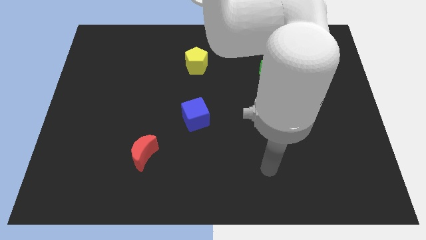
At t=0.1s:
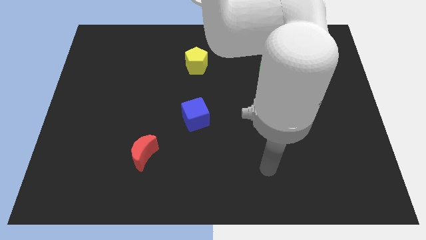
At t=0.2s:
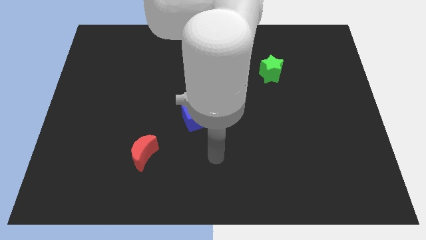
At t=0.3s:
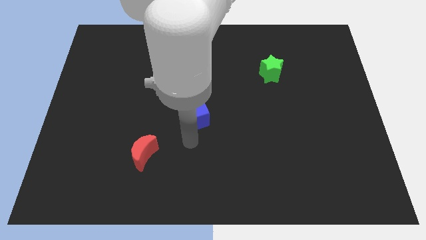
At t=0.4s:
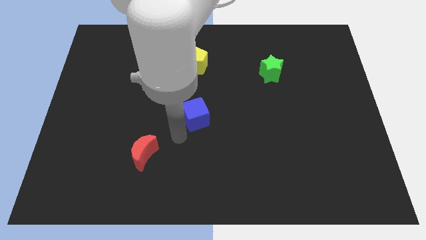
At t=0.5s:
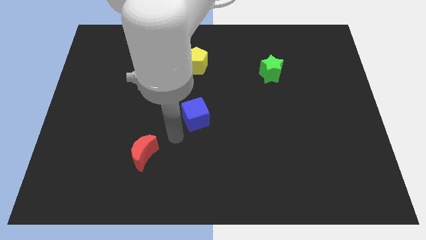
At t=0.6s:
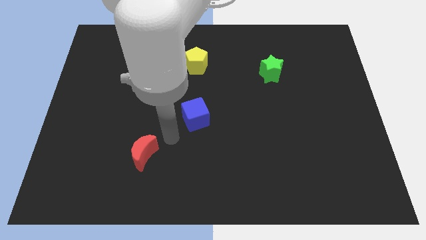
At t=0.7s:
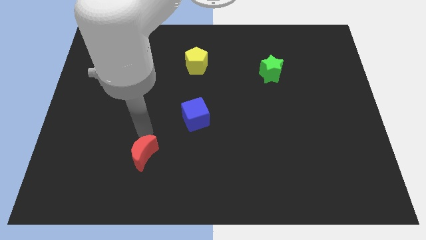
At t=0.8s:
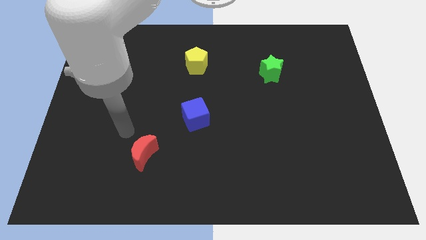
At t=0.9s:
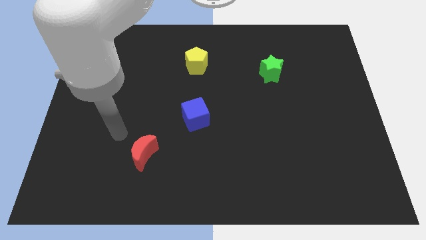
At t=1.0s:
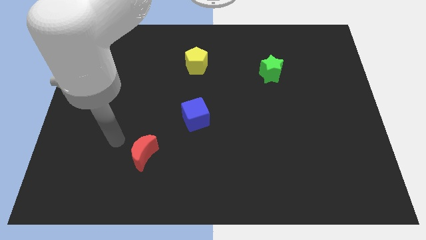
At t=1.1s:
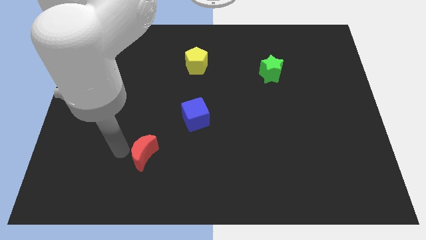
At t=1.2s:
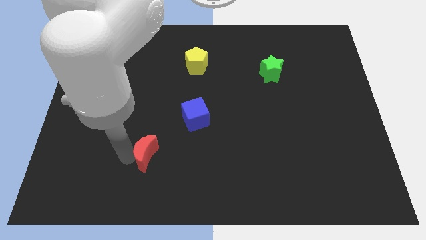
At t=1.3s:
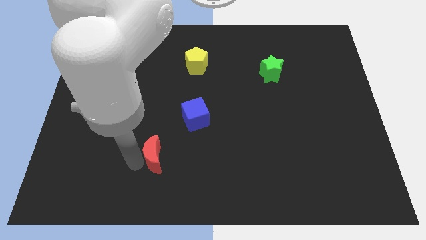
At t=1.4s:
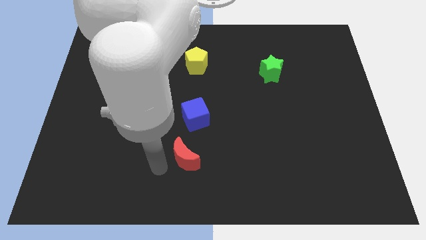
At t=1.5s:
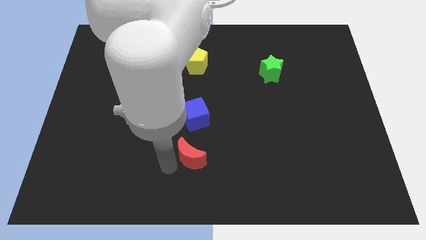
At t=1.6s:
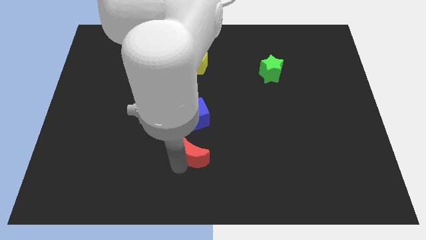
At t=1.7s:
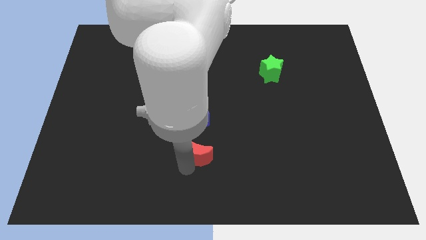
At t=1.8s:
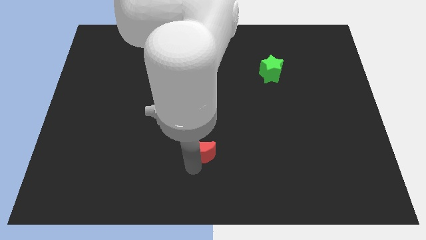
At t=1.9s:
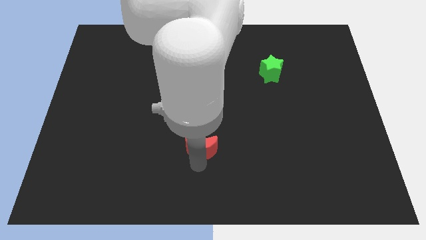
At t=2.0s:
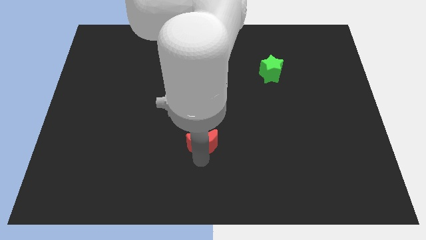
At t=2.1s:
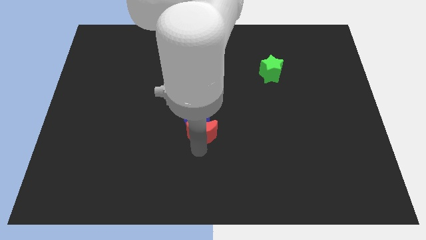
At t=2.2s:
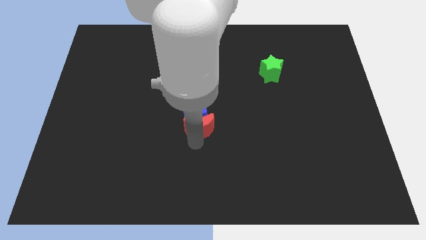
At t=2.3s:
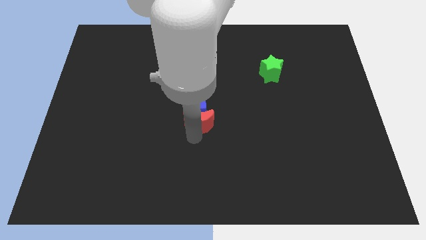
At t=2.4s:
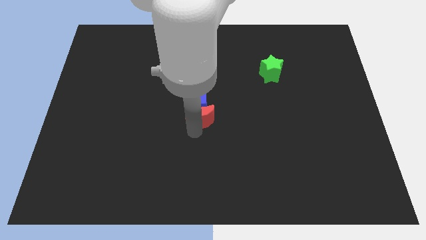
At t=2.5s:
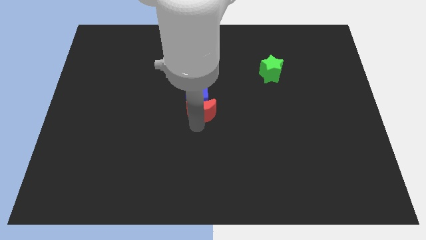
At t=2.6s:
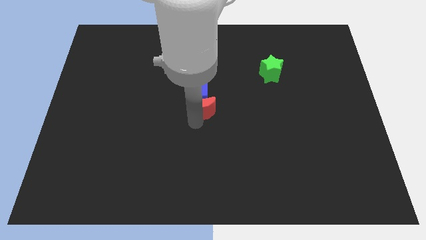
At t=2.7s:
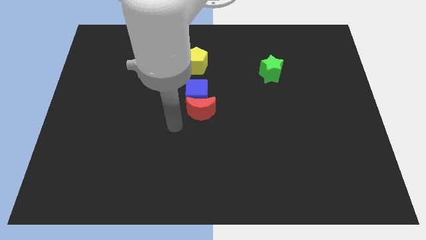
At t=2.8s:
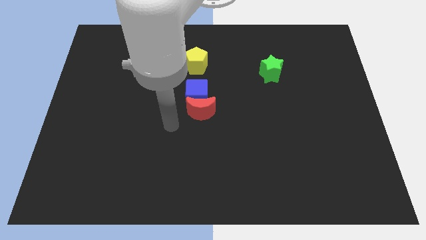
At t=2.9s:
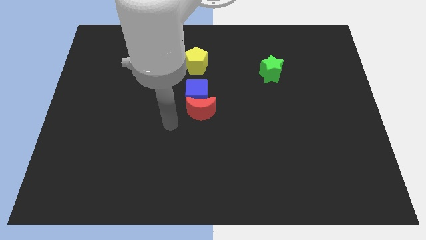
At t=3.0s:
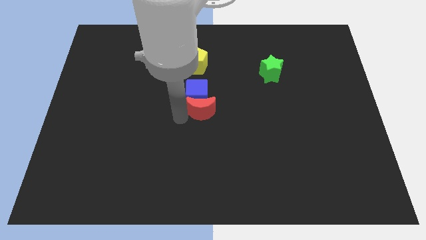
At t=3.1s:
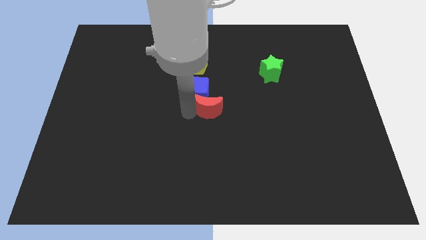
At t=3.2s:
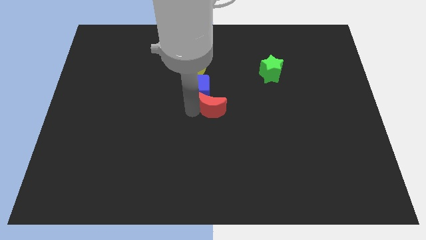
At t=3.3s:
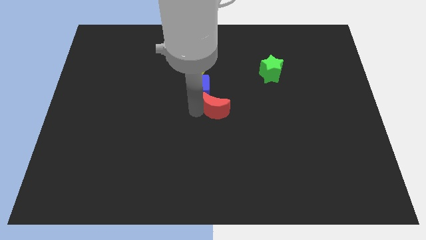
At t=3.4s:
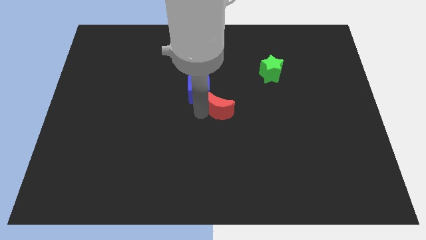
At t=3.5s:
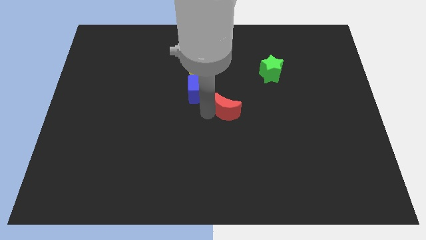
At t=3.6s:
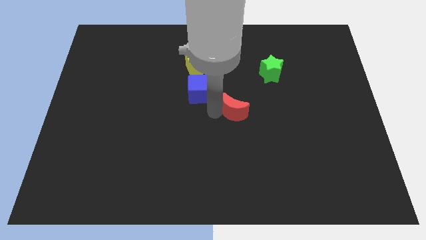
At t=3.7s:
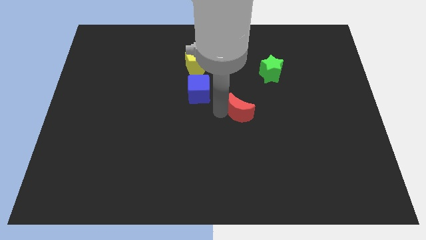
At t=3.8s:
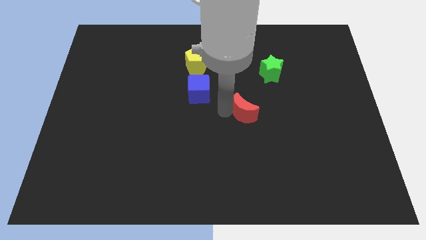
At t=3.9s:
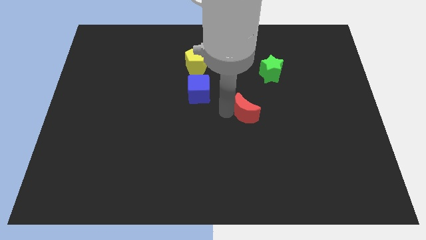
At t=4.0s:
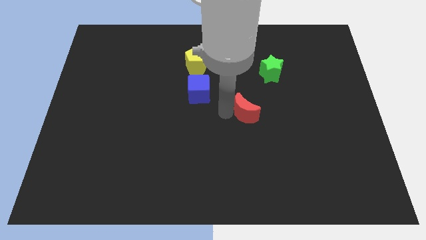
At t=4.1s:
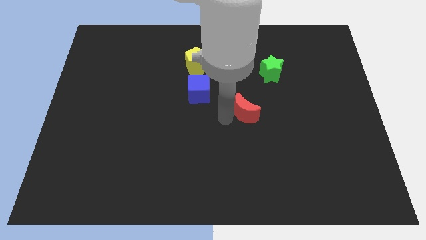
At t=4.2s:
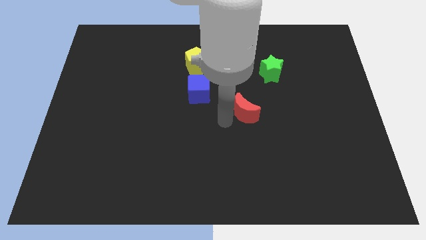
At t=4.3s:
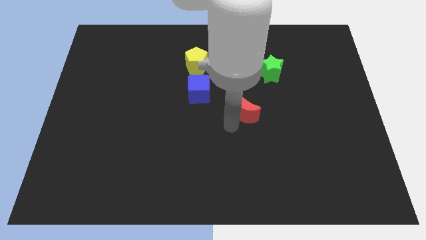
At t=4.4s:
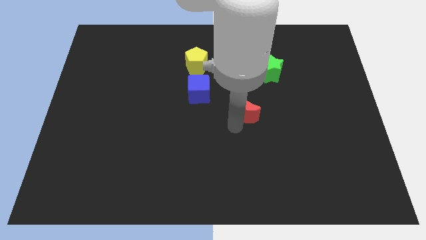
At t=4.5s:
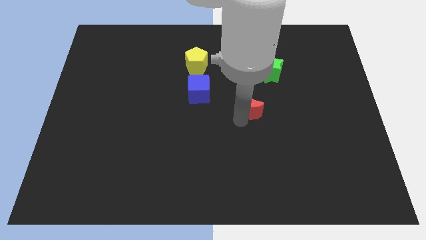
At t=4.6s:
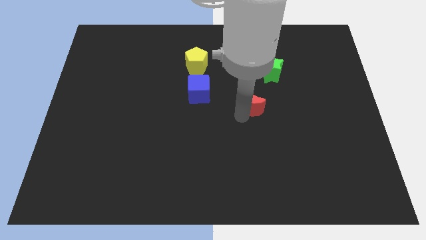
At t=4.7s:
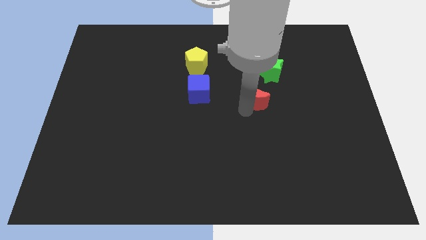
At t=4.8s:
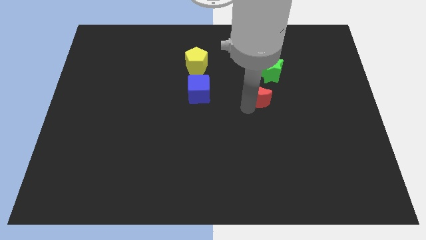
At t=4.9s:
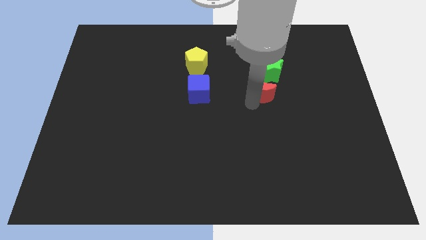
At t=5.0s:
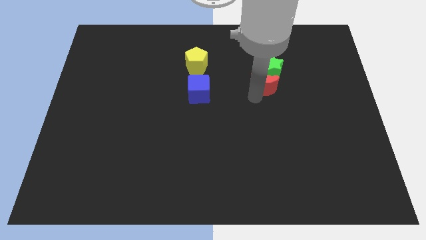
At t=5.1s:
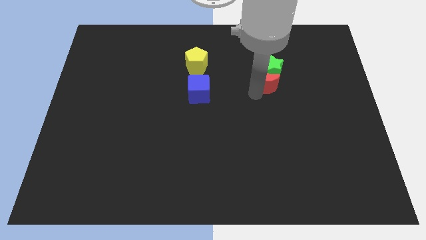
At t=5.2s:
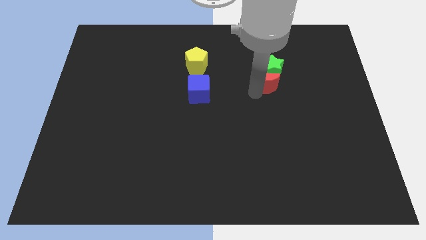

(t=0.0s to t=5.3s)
move the moon close to the star

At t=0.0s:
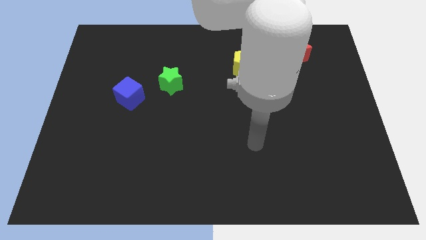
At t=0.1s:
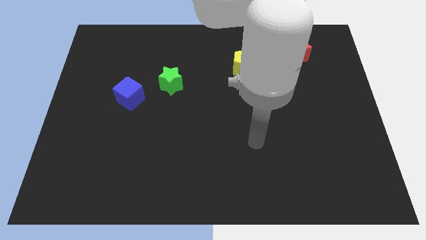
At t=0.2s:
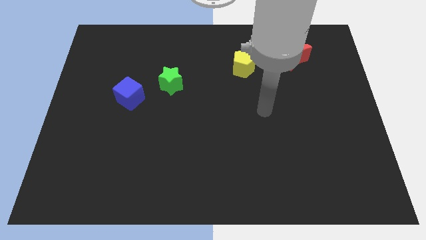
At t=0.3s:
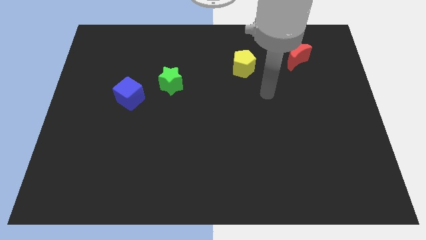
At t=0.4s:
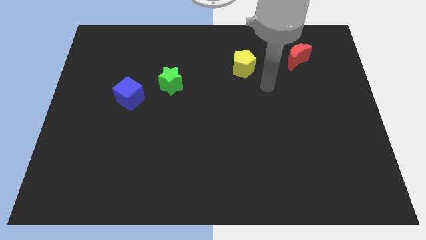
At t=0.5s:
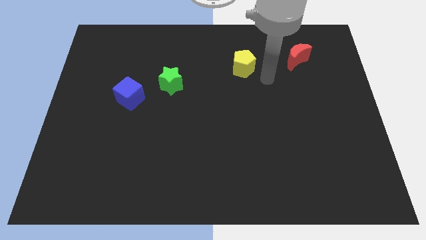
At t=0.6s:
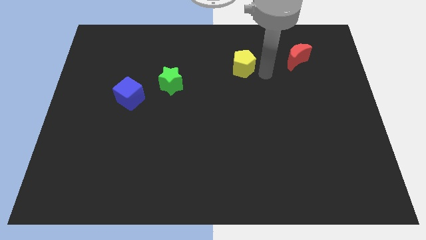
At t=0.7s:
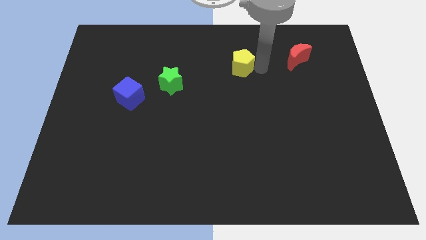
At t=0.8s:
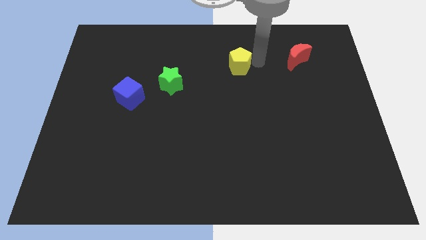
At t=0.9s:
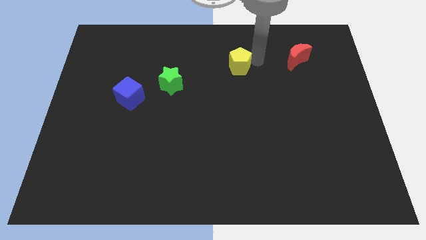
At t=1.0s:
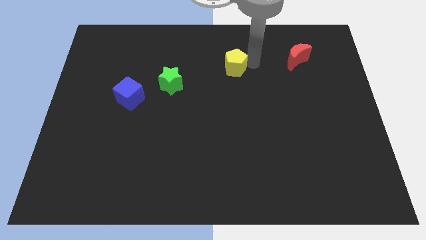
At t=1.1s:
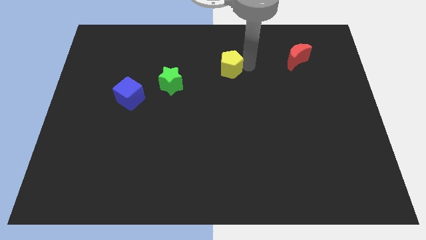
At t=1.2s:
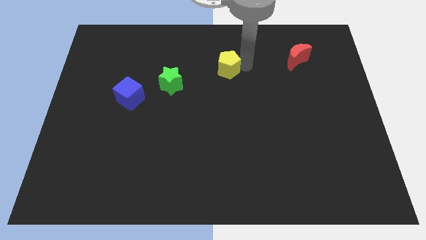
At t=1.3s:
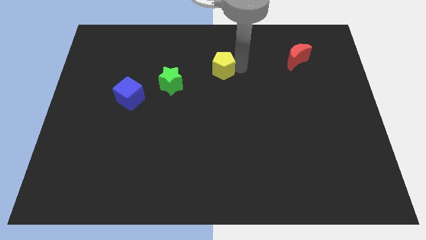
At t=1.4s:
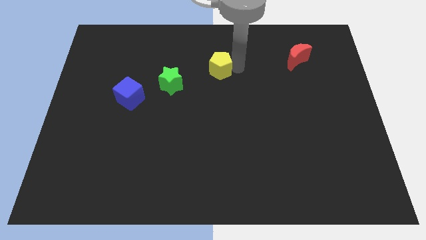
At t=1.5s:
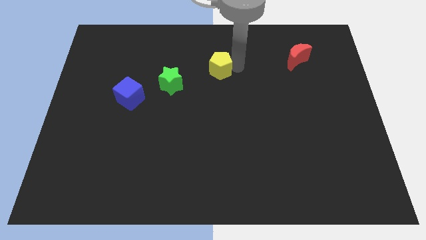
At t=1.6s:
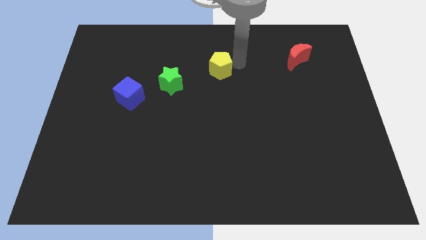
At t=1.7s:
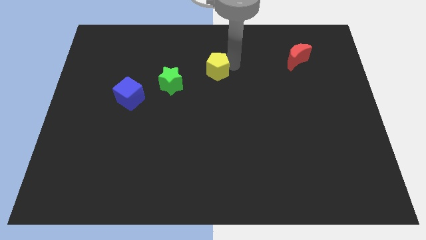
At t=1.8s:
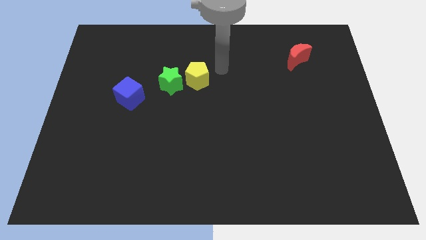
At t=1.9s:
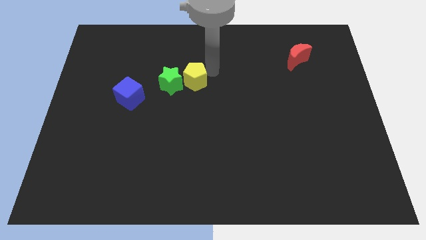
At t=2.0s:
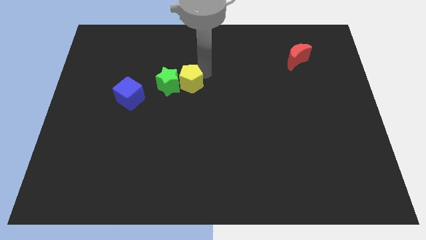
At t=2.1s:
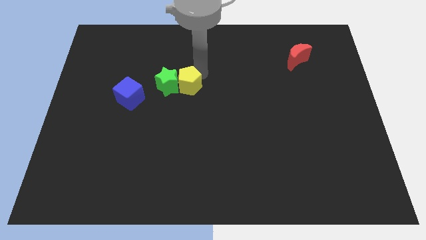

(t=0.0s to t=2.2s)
push the pentagon towards the star

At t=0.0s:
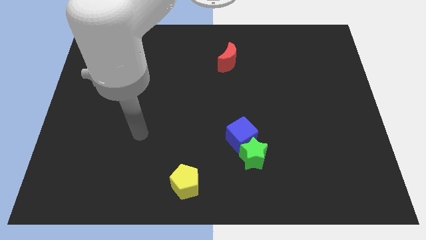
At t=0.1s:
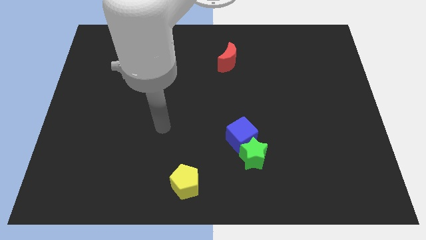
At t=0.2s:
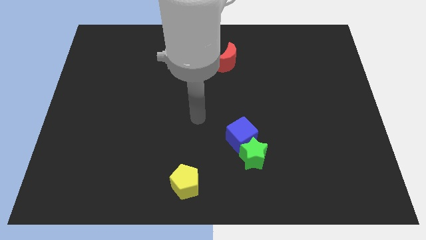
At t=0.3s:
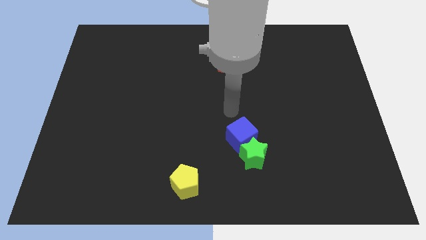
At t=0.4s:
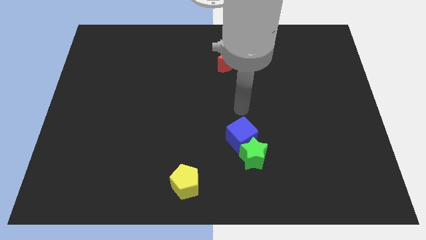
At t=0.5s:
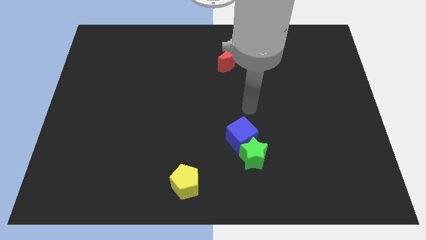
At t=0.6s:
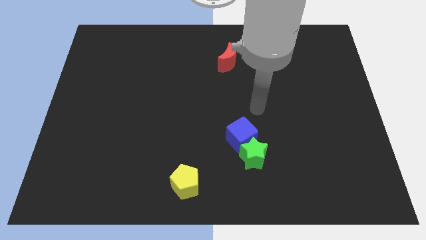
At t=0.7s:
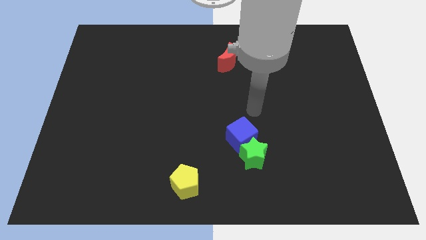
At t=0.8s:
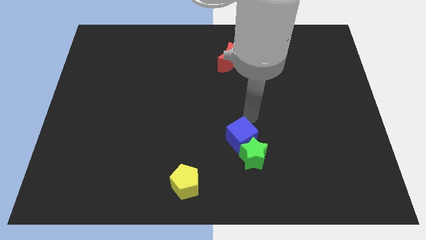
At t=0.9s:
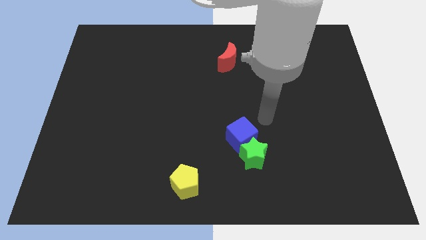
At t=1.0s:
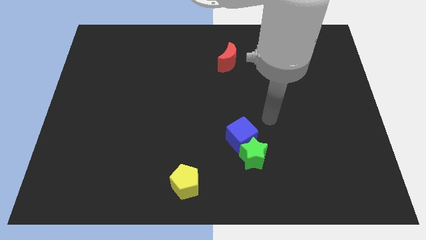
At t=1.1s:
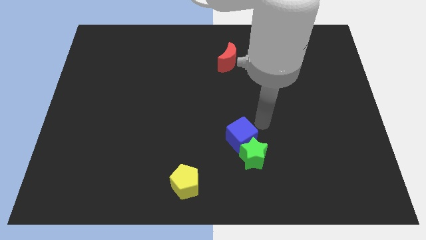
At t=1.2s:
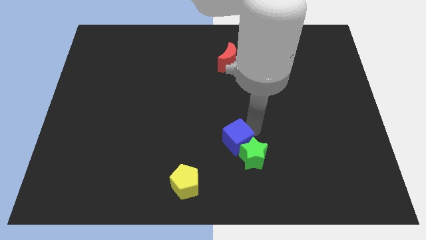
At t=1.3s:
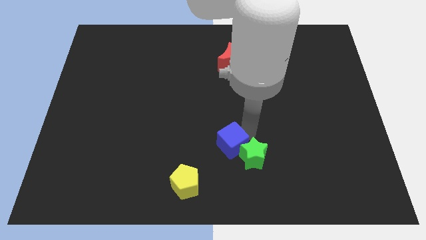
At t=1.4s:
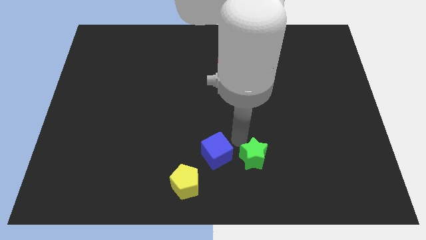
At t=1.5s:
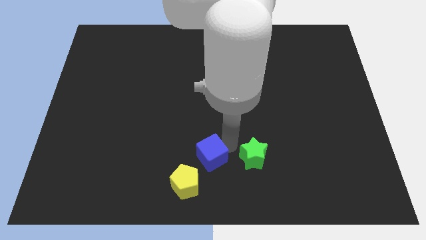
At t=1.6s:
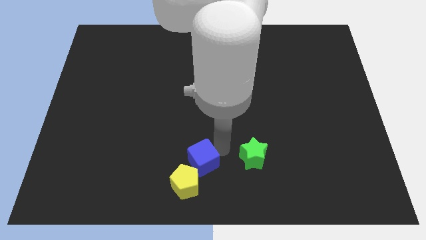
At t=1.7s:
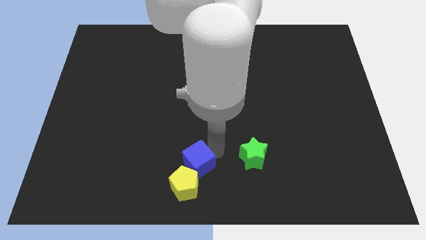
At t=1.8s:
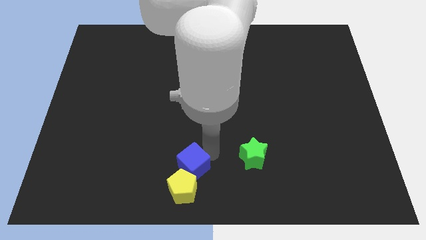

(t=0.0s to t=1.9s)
move the blue cube to the pentagon
